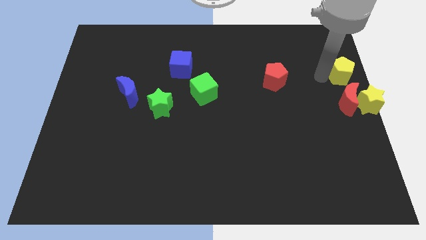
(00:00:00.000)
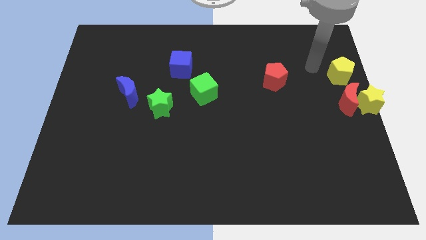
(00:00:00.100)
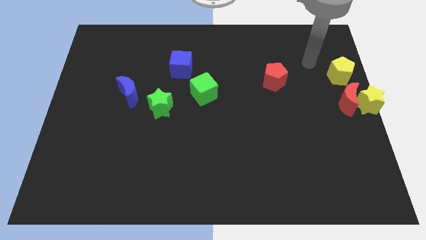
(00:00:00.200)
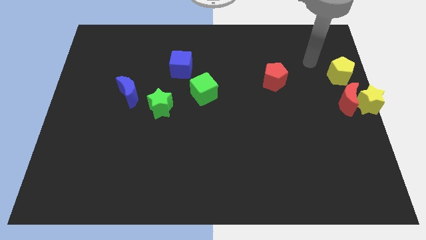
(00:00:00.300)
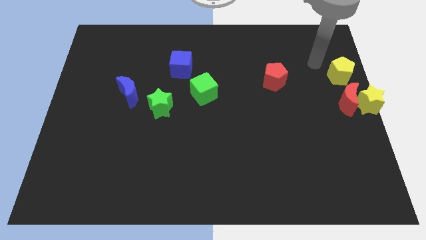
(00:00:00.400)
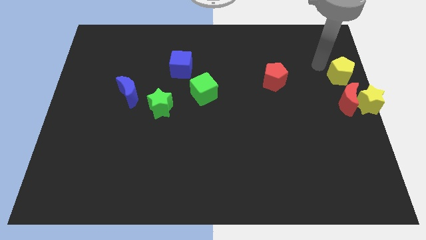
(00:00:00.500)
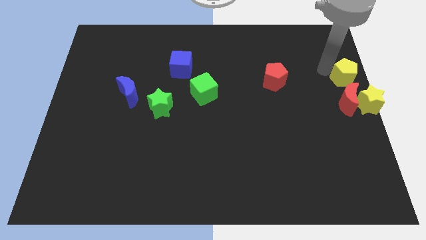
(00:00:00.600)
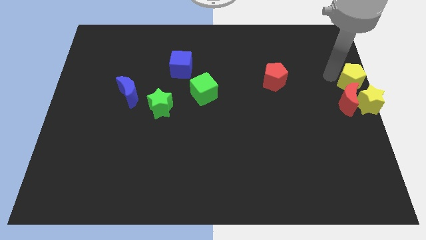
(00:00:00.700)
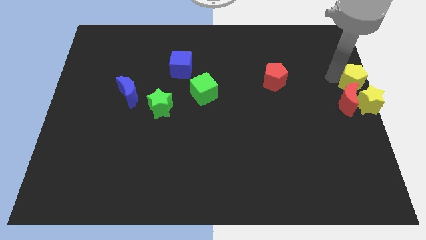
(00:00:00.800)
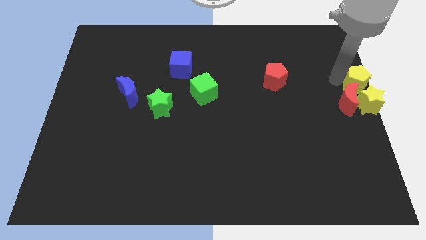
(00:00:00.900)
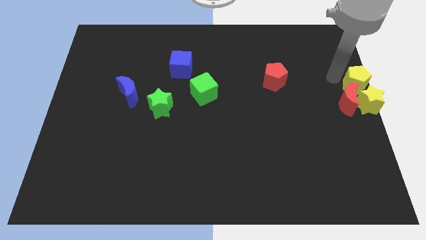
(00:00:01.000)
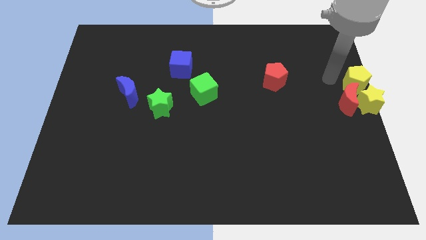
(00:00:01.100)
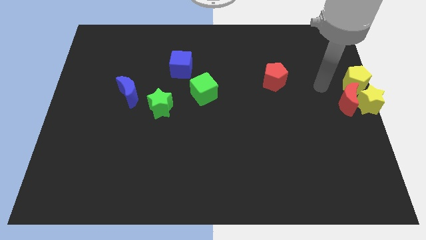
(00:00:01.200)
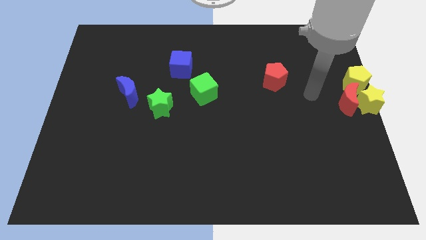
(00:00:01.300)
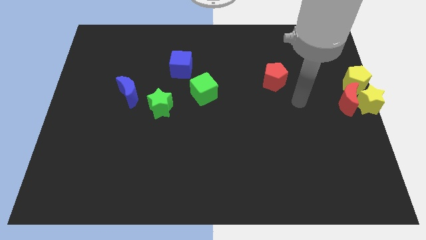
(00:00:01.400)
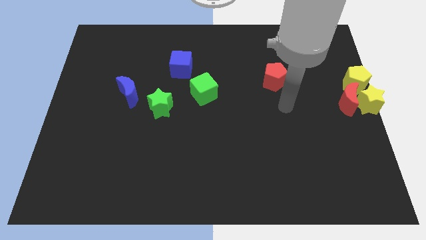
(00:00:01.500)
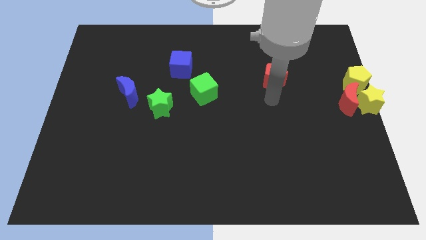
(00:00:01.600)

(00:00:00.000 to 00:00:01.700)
slide the yellow pentagon to the top of the yellow star

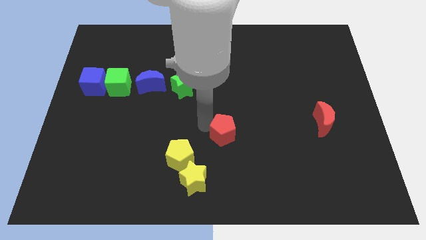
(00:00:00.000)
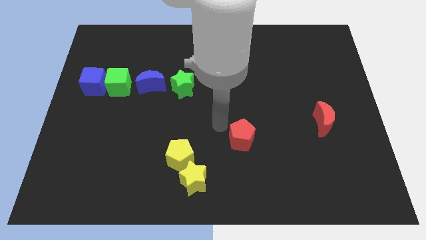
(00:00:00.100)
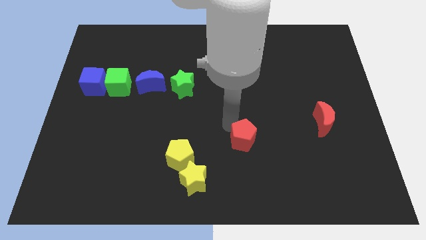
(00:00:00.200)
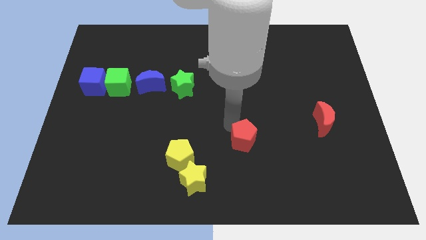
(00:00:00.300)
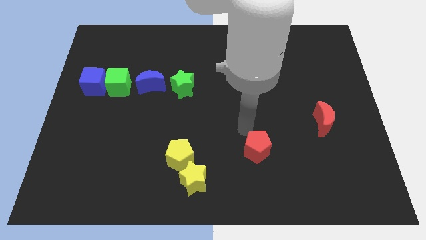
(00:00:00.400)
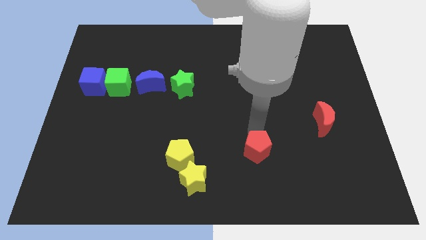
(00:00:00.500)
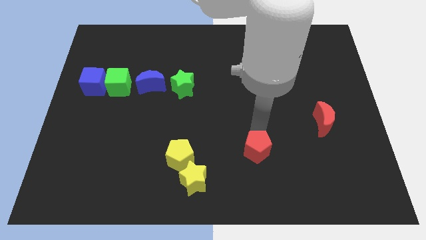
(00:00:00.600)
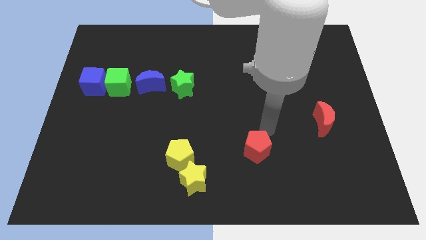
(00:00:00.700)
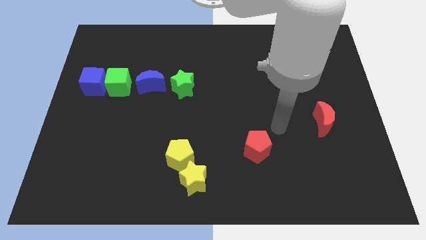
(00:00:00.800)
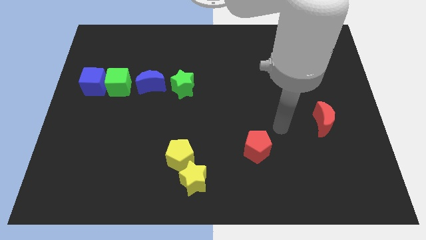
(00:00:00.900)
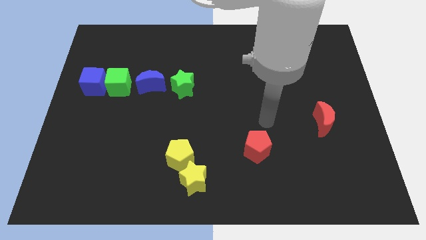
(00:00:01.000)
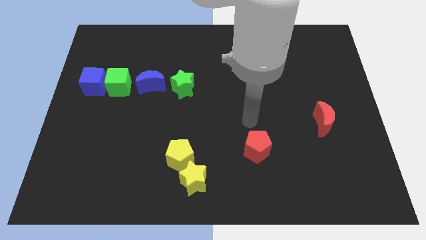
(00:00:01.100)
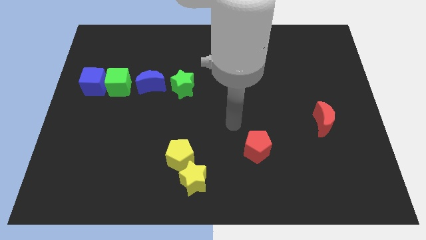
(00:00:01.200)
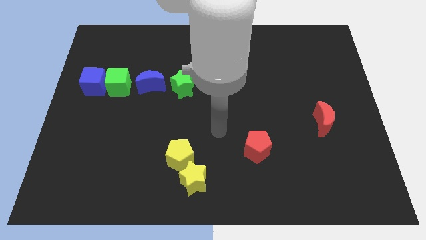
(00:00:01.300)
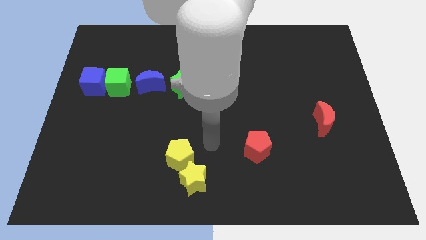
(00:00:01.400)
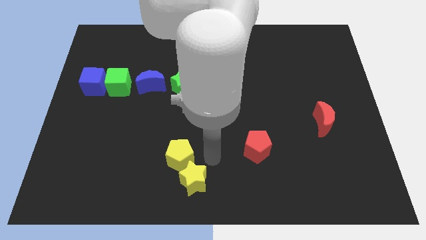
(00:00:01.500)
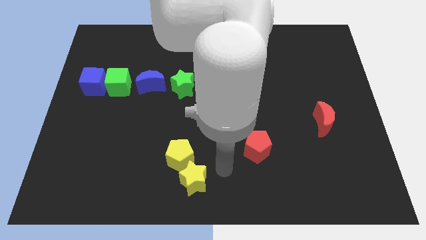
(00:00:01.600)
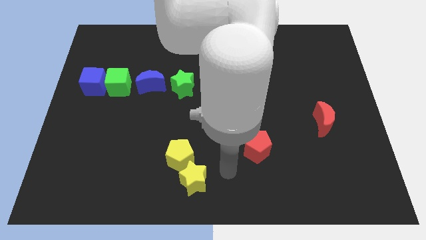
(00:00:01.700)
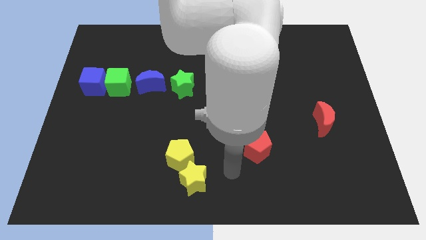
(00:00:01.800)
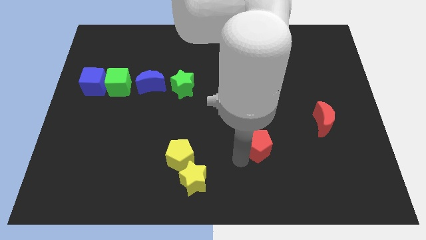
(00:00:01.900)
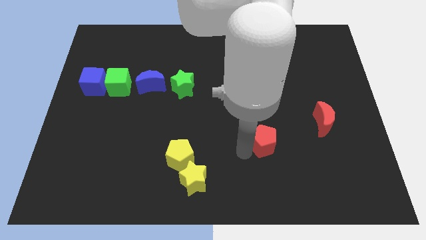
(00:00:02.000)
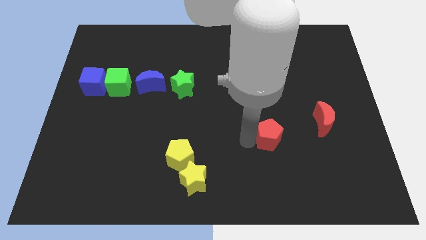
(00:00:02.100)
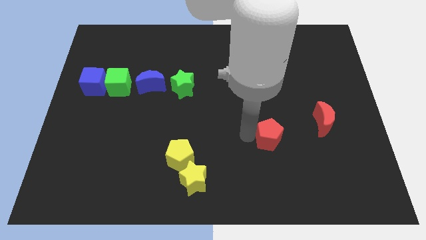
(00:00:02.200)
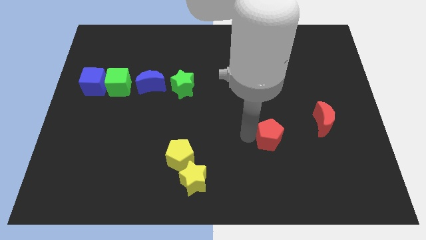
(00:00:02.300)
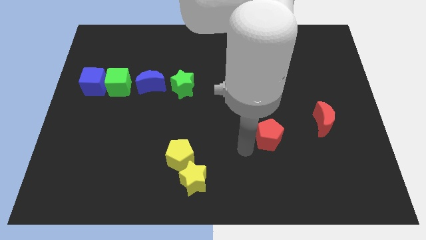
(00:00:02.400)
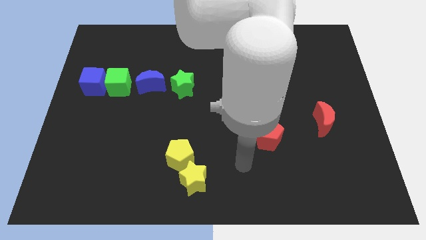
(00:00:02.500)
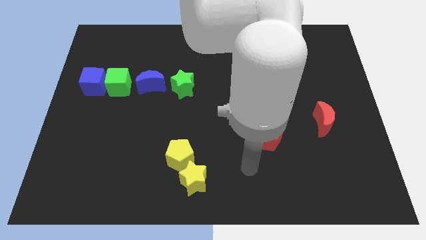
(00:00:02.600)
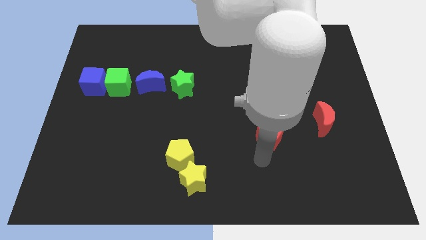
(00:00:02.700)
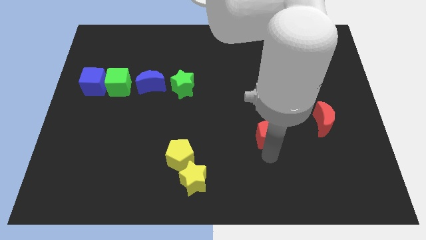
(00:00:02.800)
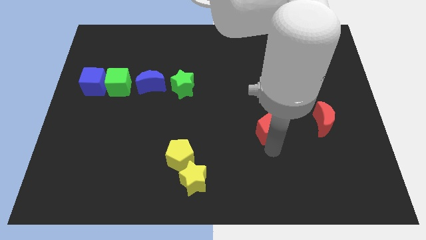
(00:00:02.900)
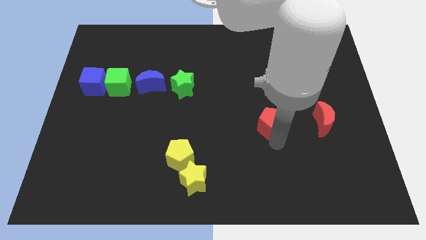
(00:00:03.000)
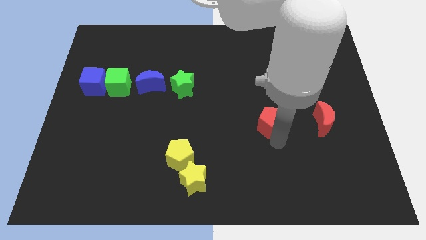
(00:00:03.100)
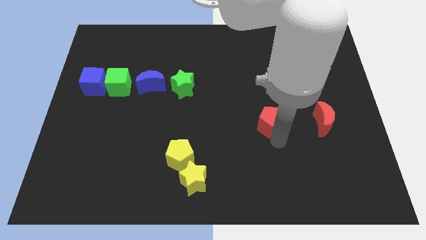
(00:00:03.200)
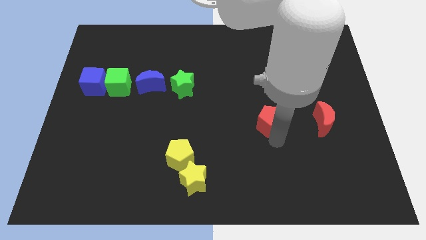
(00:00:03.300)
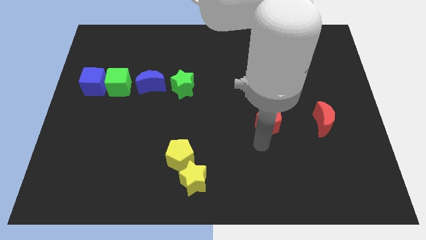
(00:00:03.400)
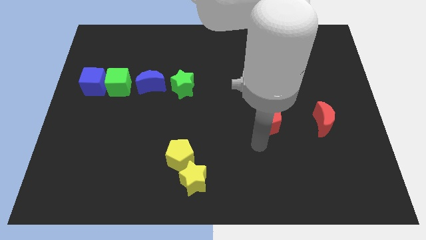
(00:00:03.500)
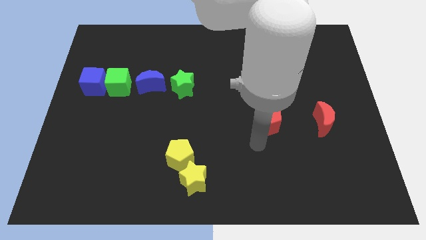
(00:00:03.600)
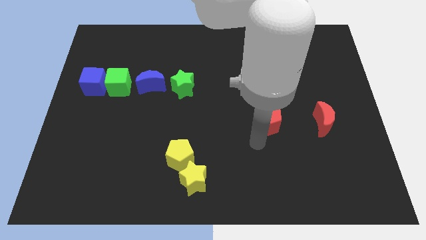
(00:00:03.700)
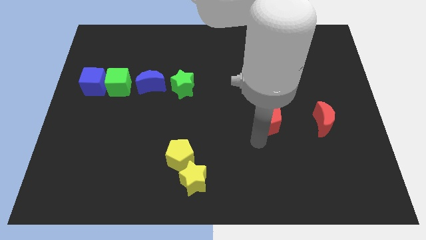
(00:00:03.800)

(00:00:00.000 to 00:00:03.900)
place the red pentagon to the left of the red crescent

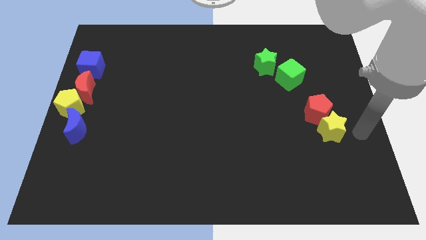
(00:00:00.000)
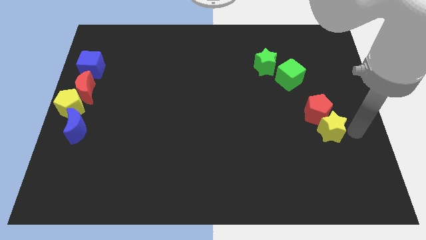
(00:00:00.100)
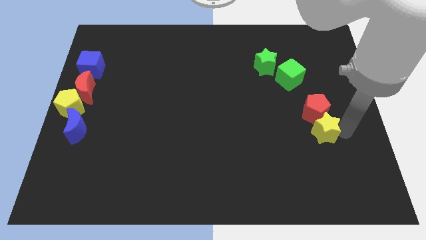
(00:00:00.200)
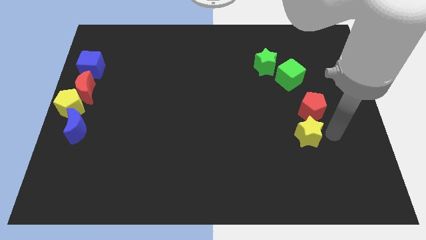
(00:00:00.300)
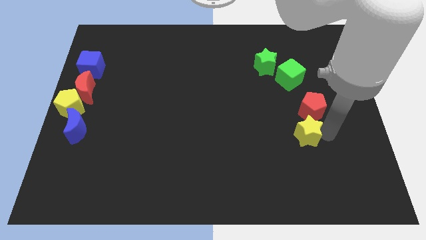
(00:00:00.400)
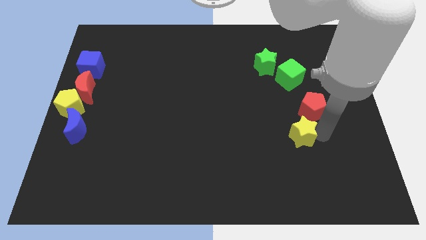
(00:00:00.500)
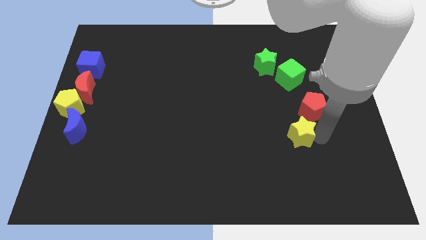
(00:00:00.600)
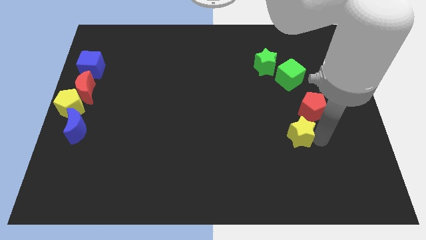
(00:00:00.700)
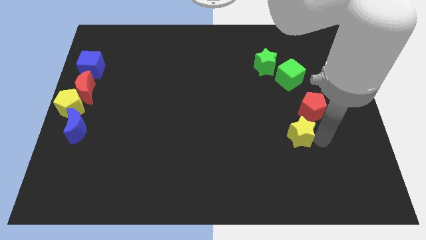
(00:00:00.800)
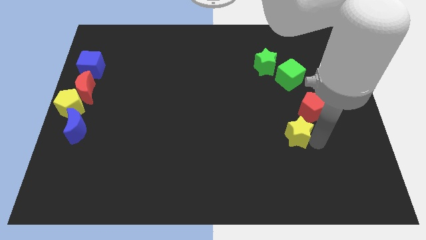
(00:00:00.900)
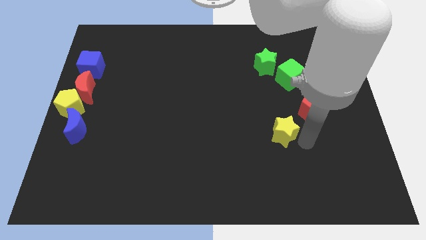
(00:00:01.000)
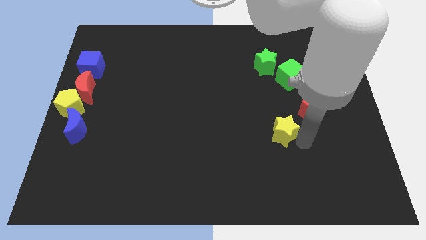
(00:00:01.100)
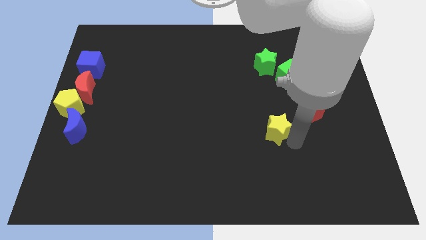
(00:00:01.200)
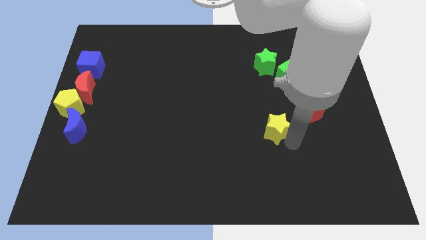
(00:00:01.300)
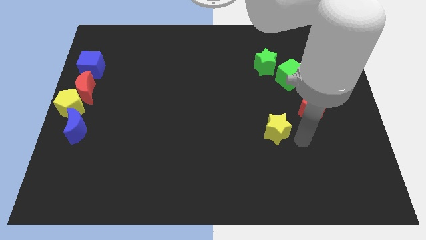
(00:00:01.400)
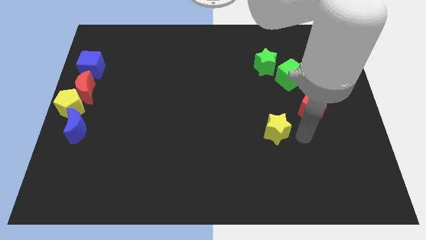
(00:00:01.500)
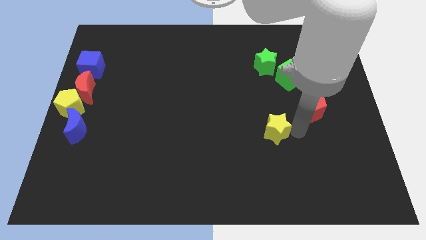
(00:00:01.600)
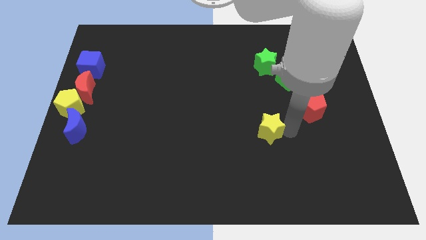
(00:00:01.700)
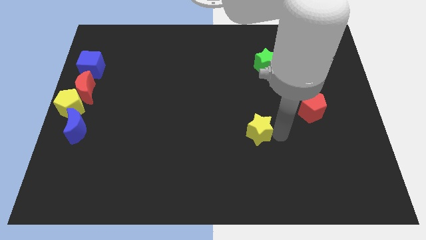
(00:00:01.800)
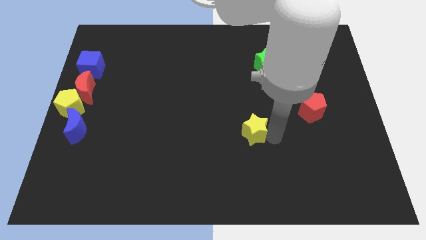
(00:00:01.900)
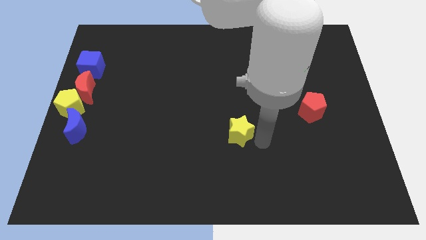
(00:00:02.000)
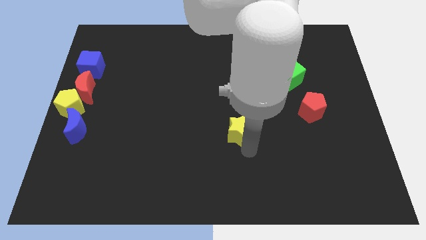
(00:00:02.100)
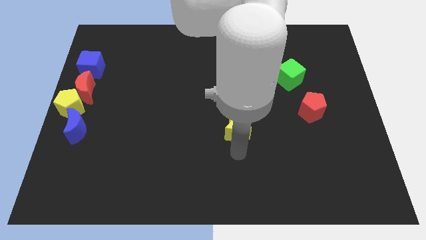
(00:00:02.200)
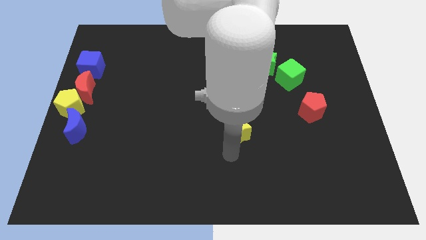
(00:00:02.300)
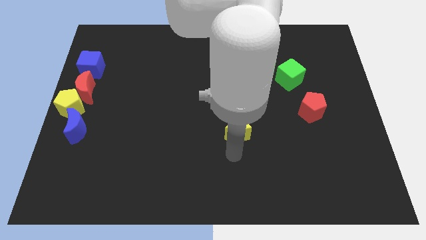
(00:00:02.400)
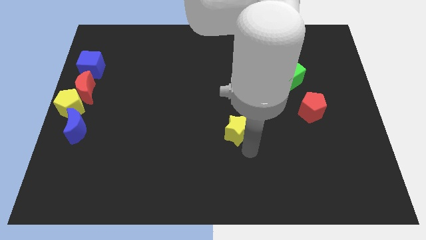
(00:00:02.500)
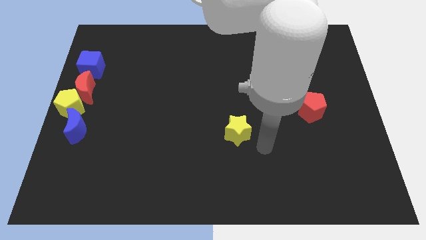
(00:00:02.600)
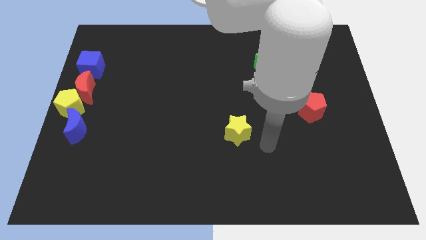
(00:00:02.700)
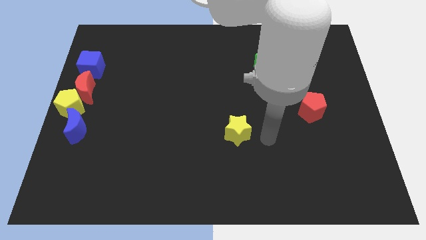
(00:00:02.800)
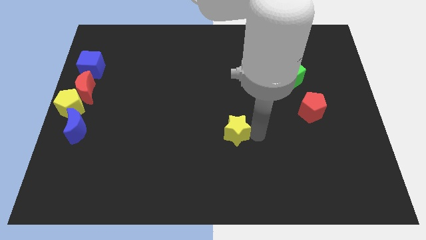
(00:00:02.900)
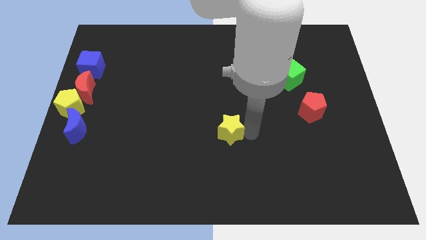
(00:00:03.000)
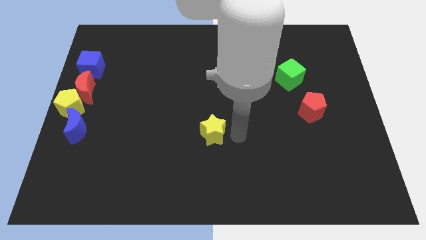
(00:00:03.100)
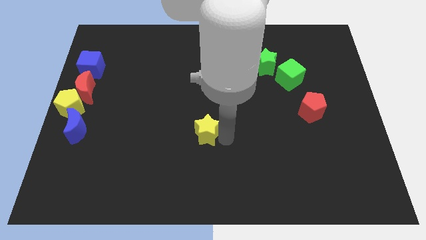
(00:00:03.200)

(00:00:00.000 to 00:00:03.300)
move the yellow star to the center of the board
